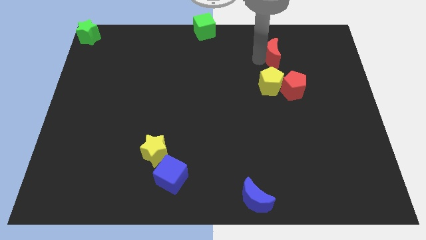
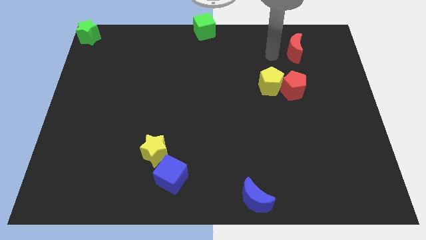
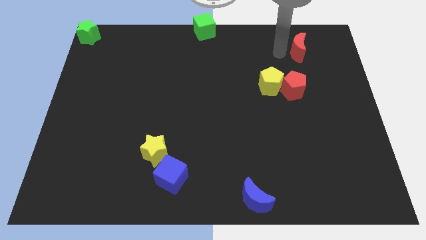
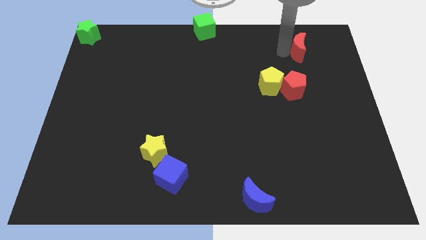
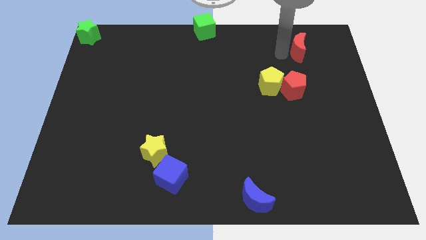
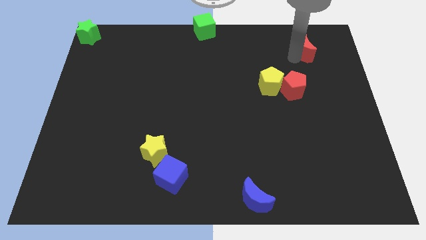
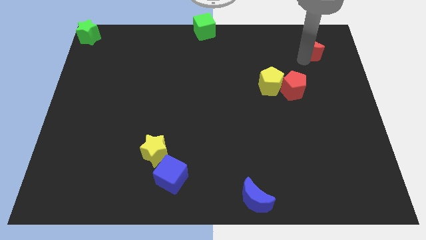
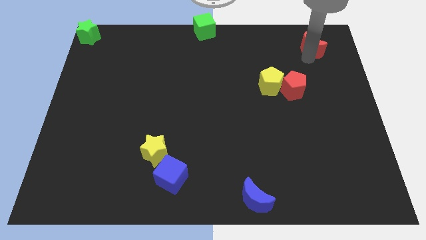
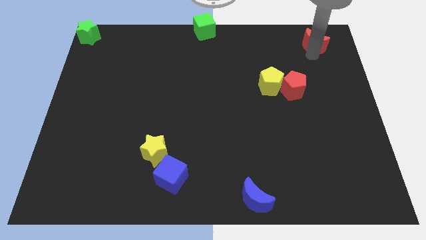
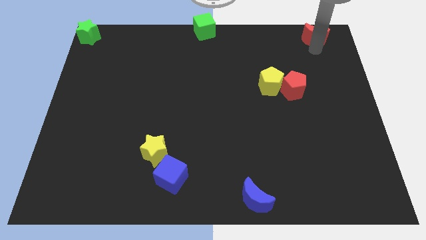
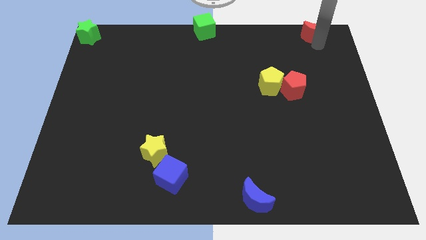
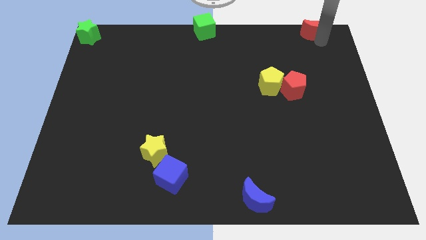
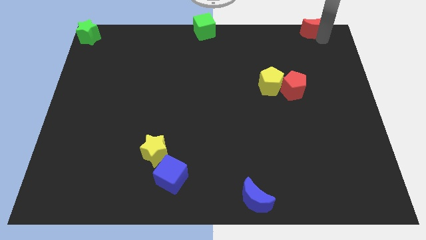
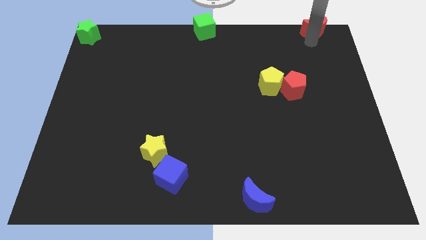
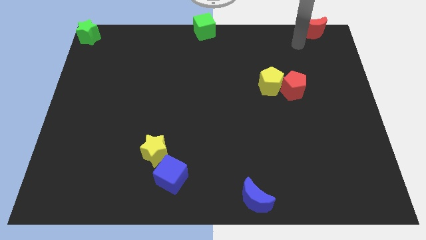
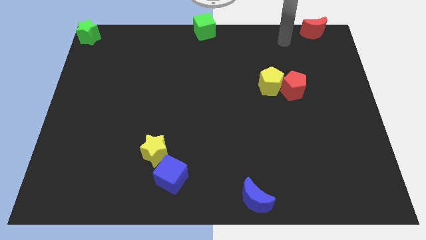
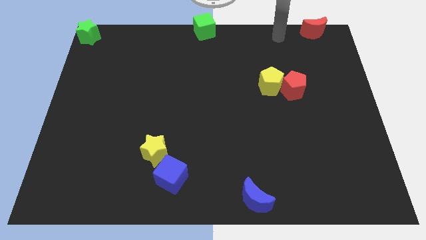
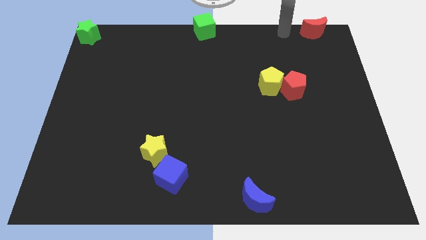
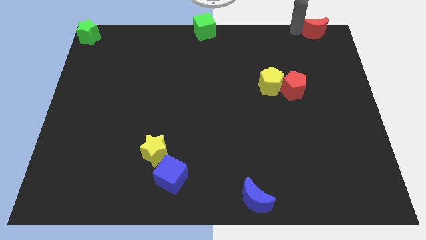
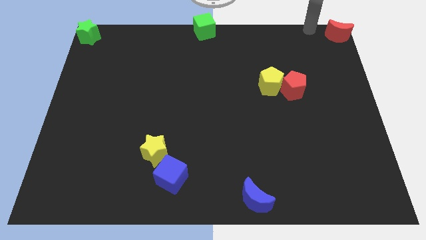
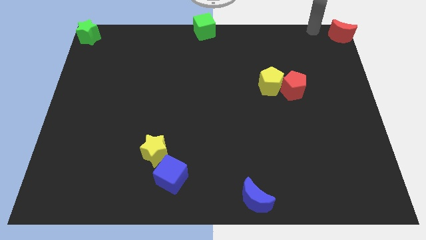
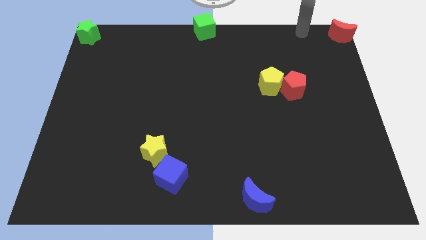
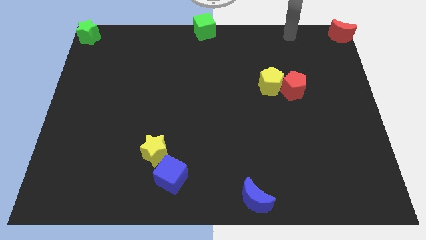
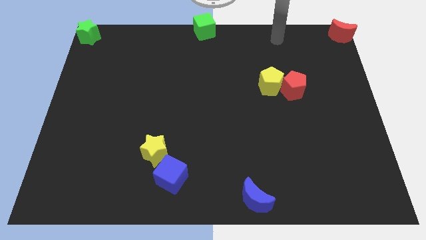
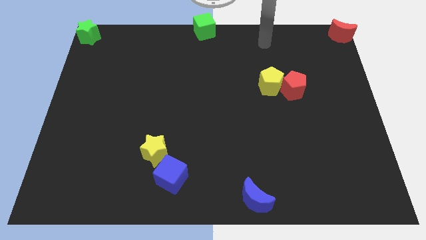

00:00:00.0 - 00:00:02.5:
move red crescent on top right corner

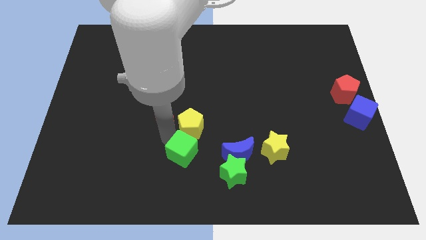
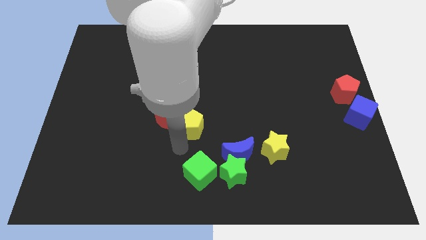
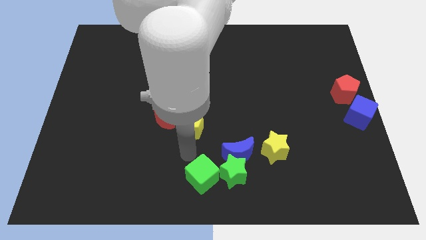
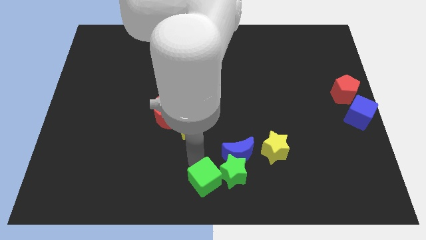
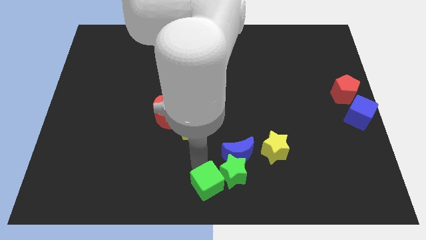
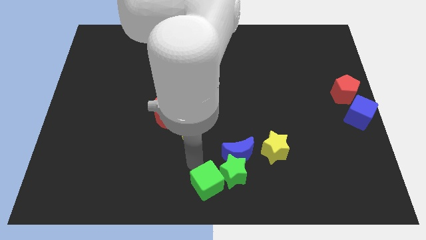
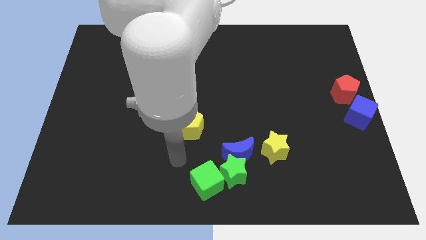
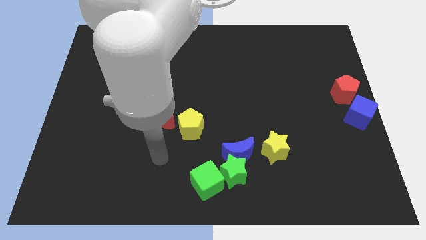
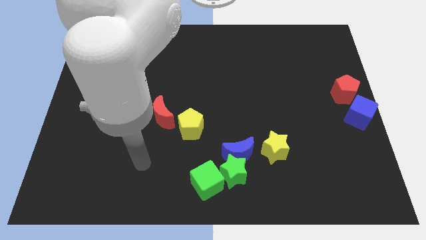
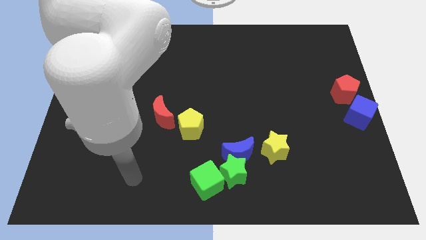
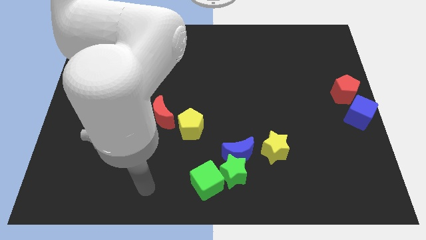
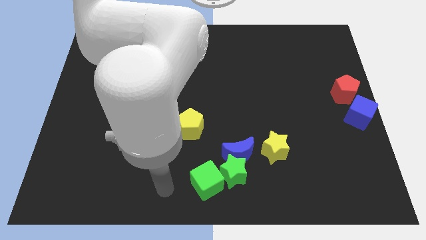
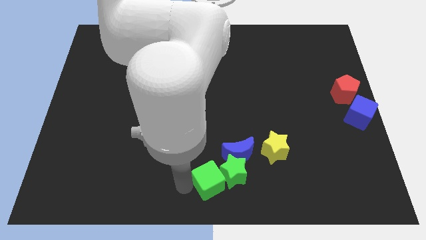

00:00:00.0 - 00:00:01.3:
move the green cube to the left of the green star

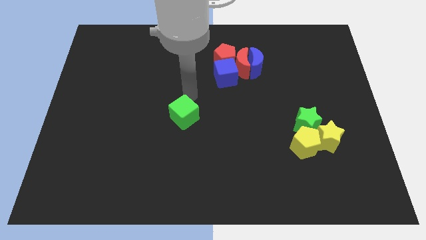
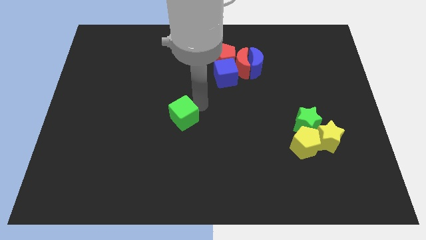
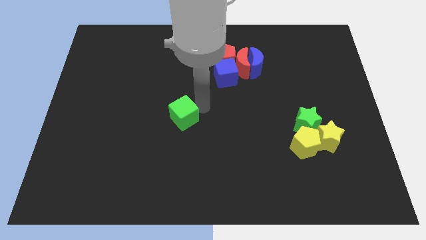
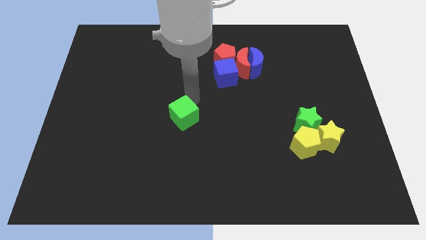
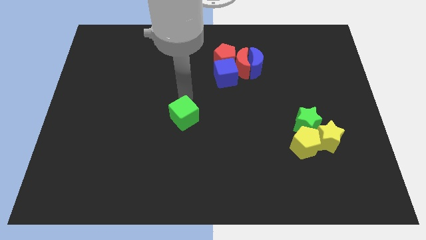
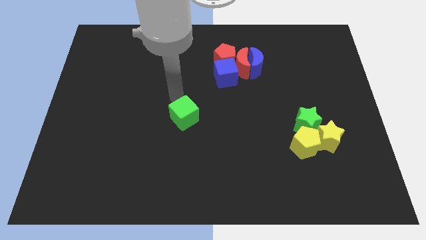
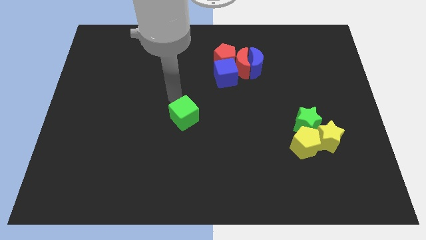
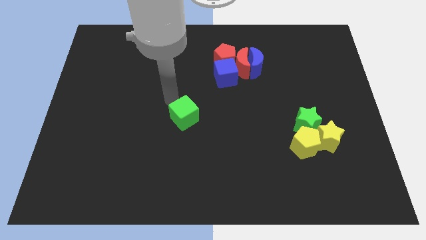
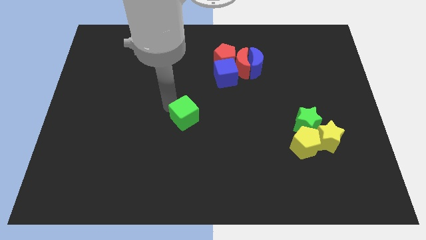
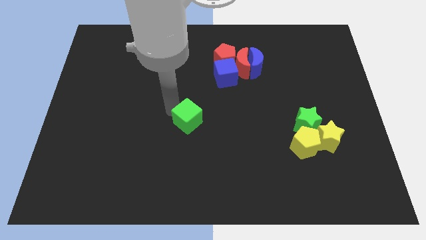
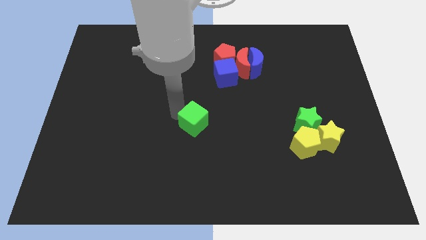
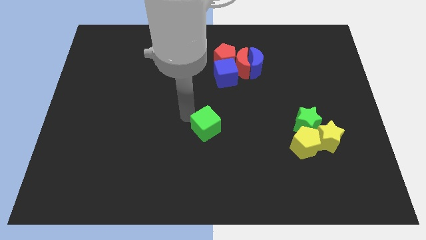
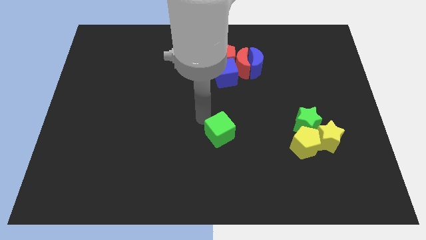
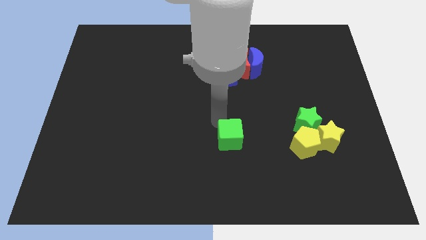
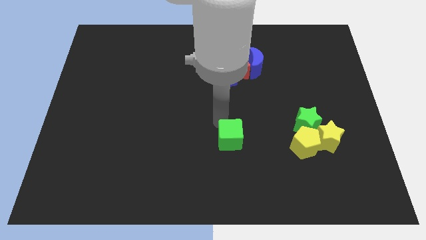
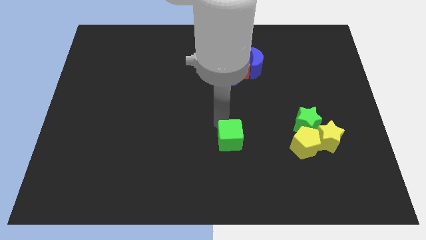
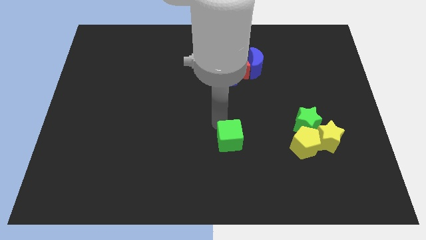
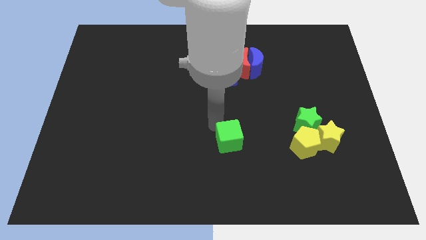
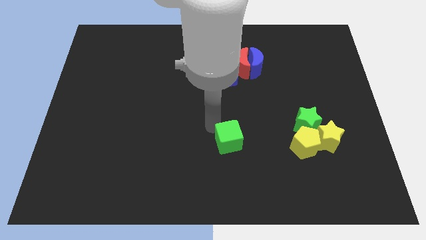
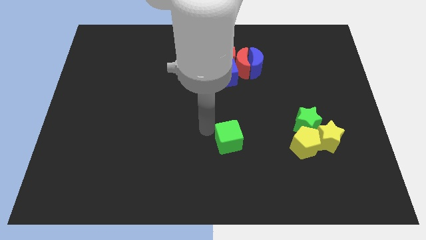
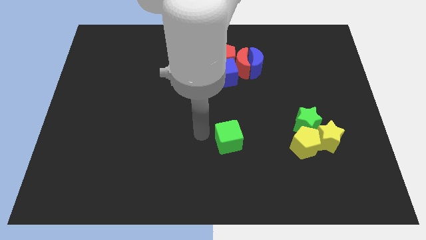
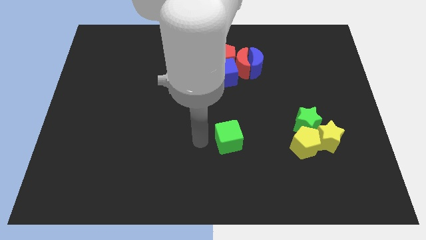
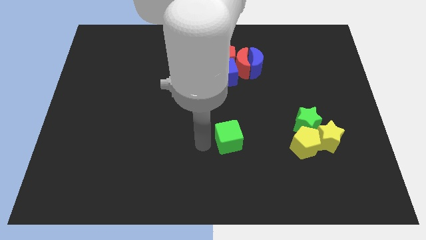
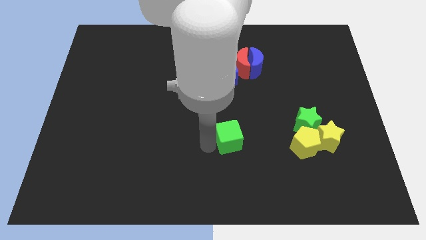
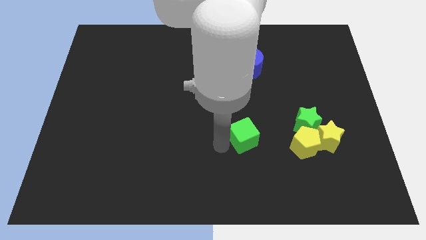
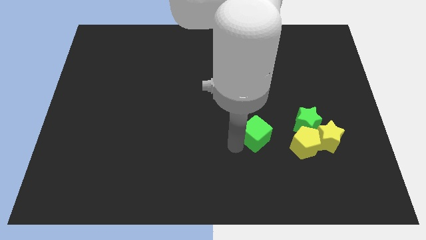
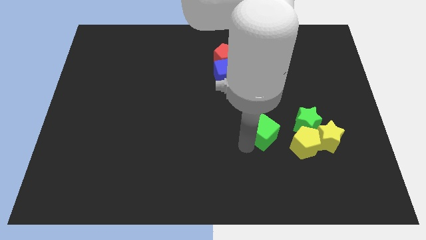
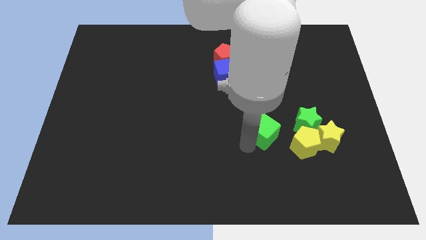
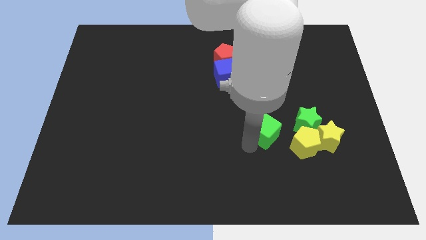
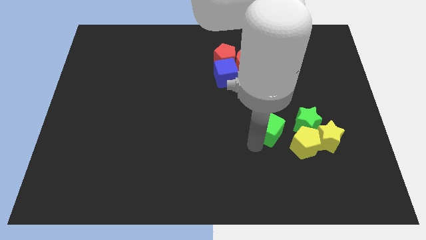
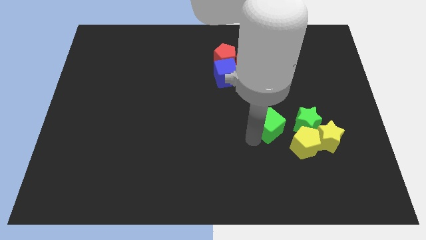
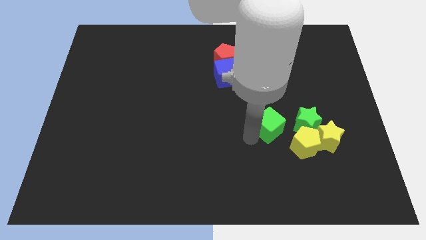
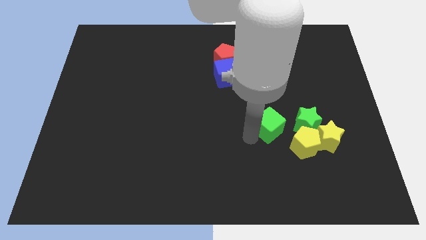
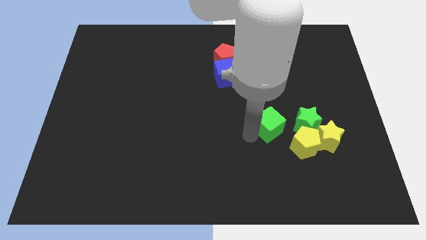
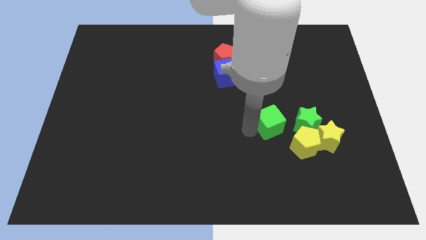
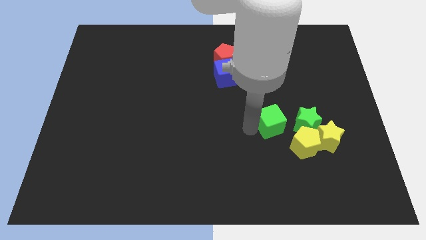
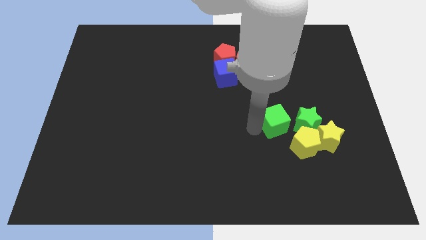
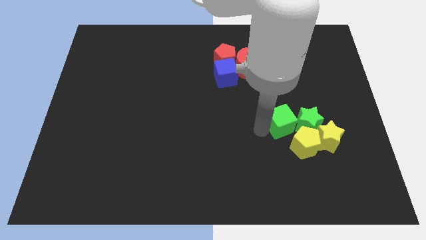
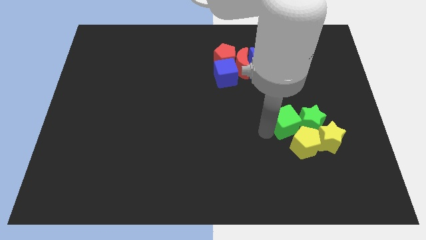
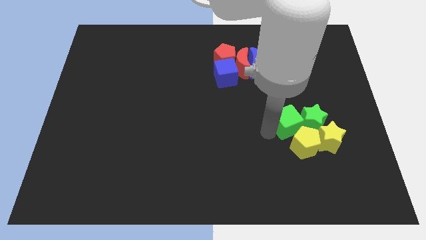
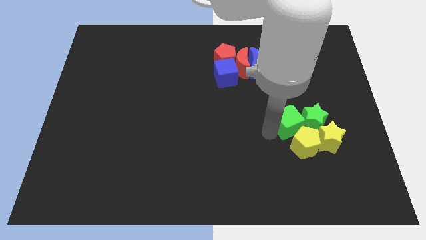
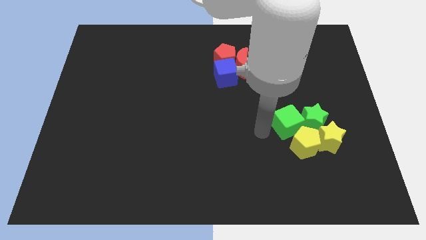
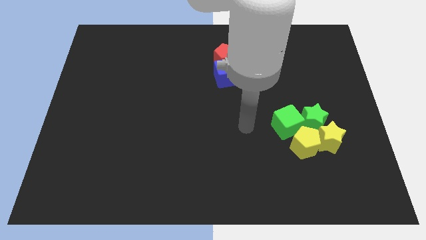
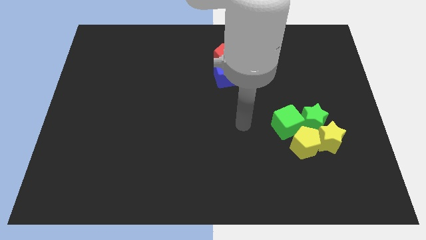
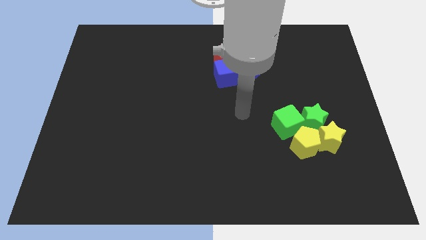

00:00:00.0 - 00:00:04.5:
push green cube towards green star

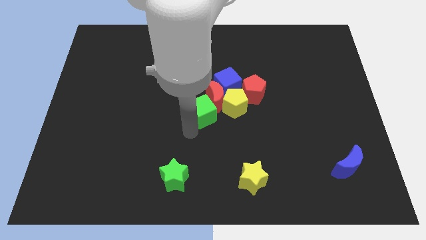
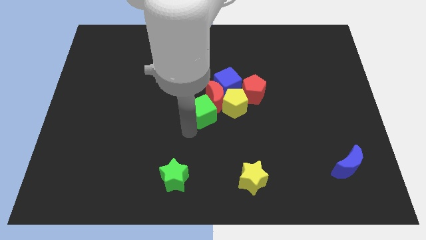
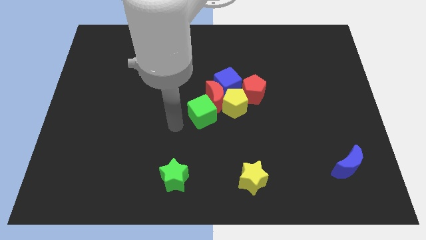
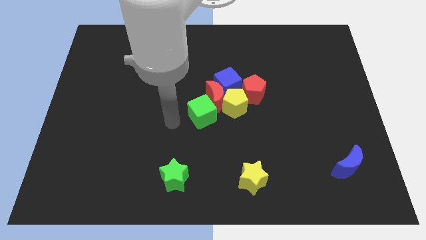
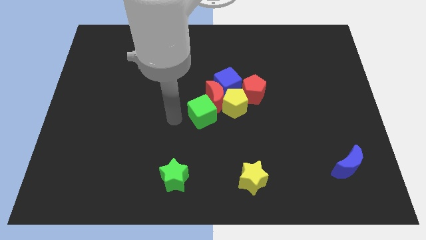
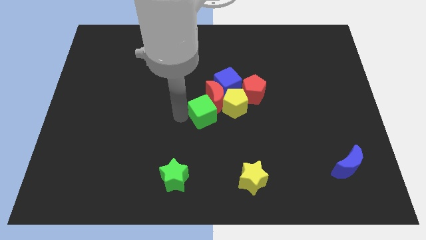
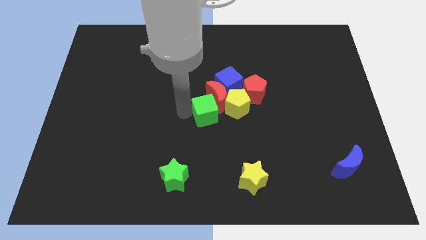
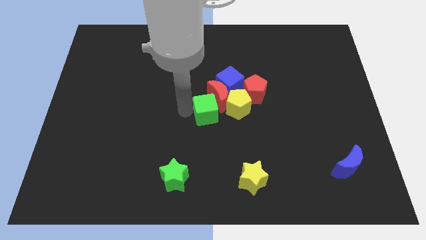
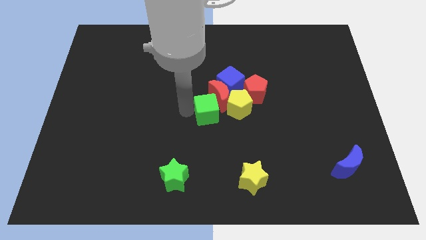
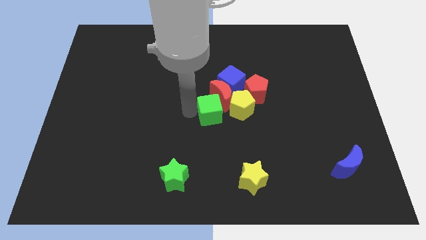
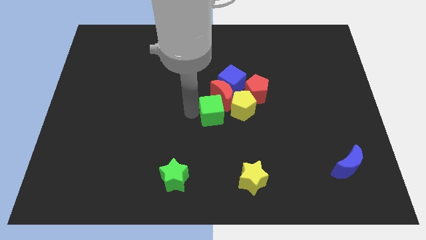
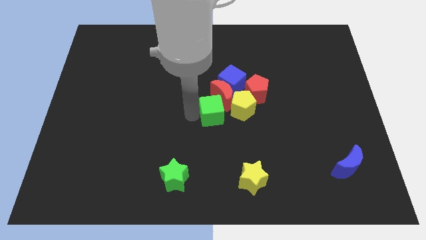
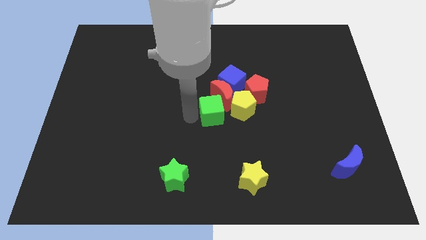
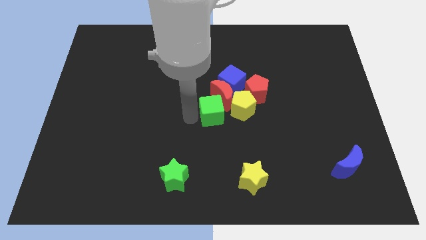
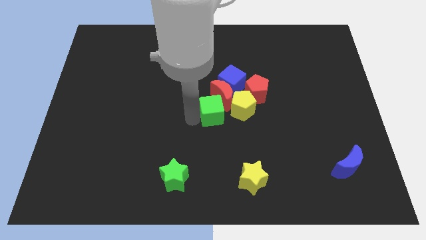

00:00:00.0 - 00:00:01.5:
place the green cube into red crescent
